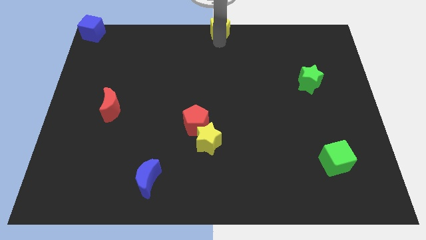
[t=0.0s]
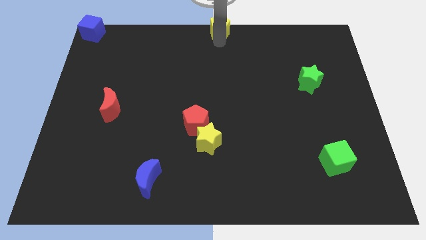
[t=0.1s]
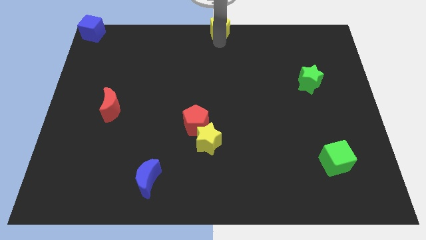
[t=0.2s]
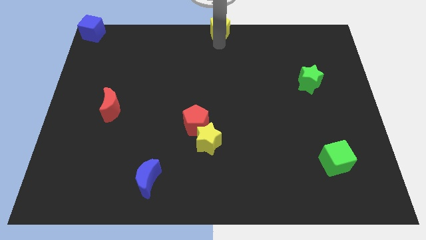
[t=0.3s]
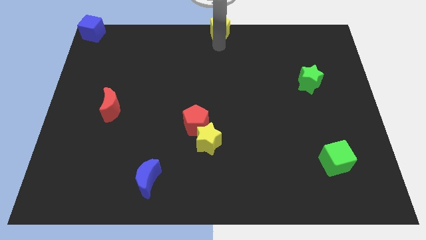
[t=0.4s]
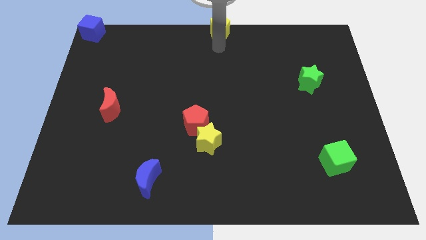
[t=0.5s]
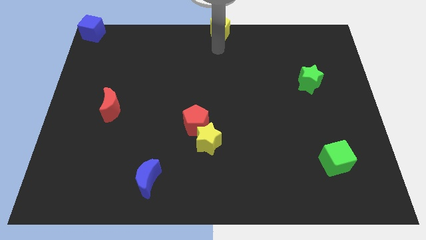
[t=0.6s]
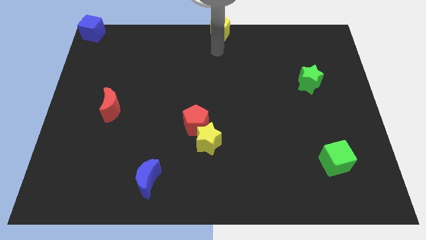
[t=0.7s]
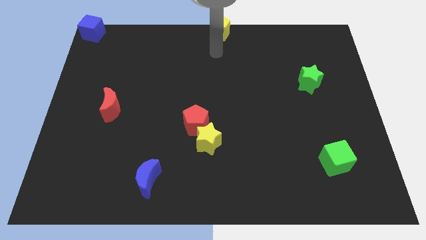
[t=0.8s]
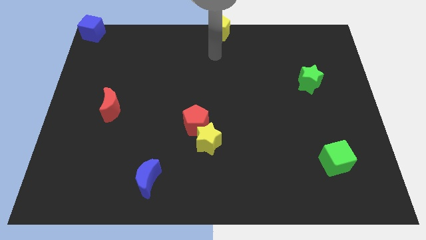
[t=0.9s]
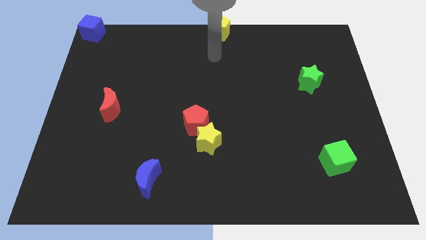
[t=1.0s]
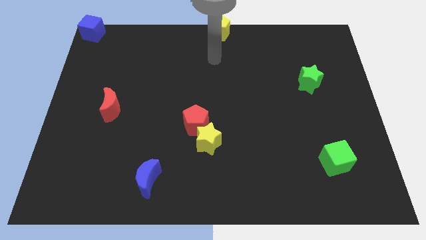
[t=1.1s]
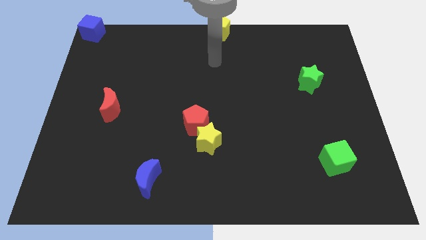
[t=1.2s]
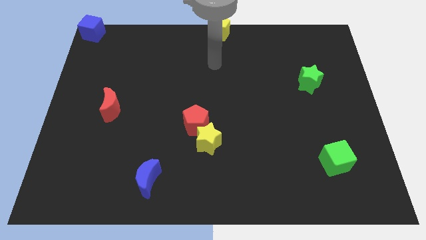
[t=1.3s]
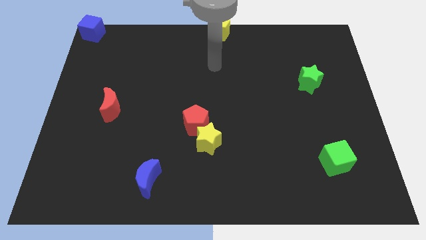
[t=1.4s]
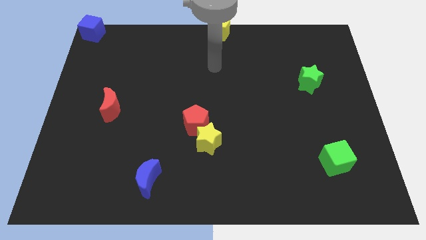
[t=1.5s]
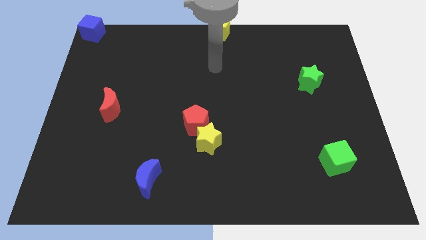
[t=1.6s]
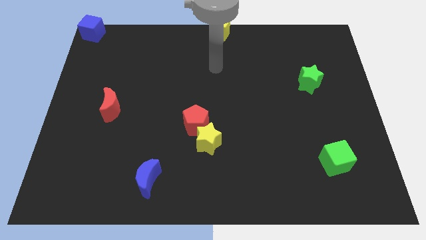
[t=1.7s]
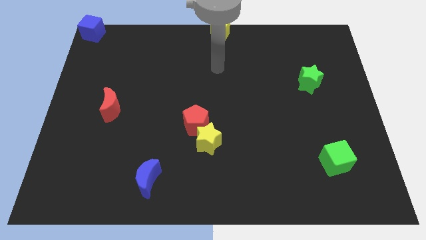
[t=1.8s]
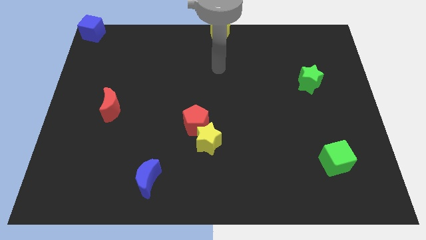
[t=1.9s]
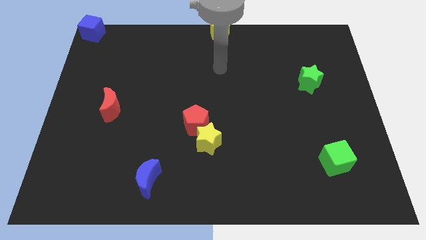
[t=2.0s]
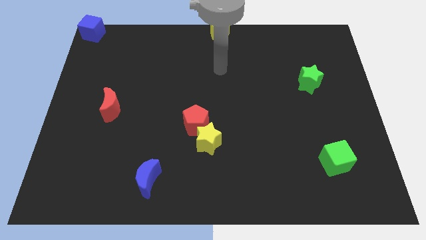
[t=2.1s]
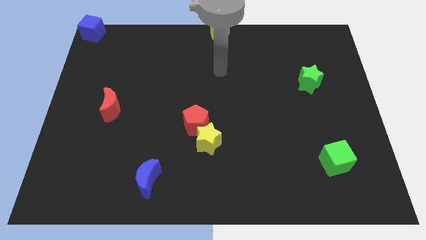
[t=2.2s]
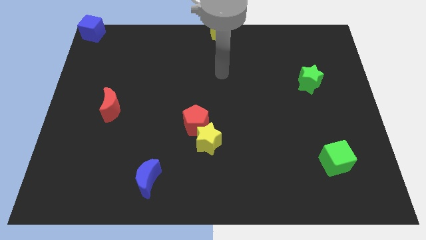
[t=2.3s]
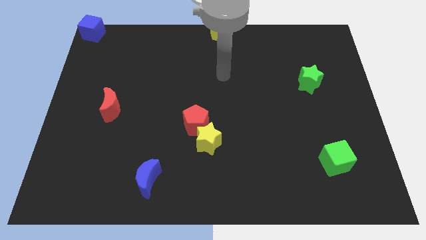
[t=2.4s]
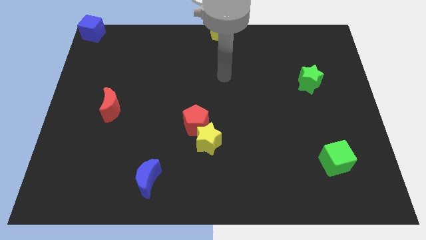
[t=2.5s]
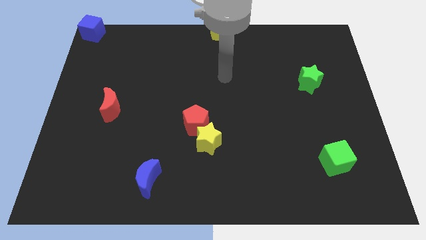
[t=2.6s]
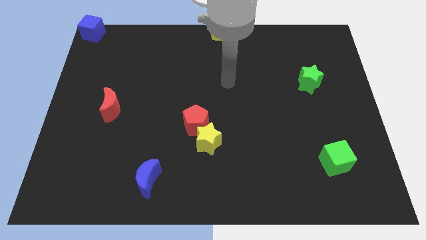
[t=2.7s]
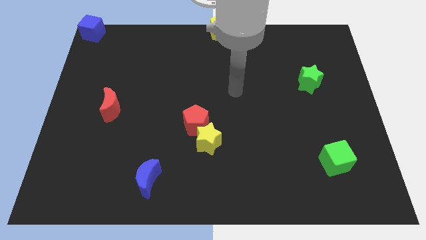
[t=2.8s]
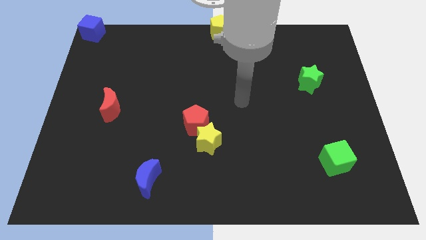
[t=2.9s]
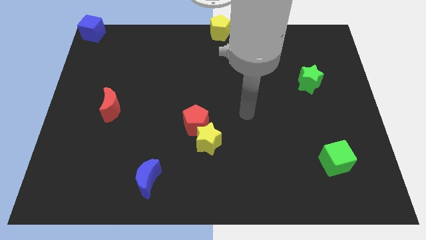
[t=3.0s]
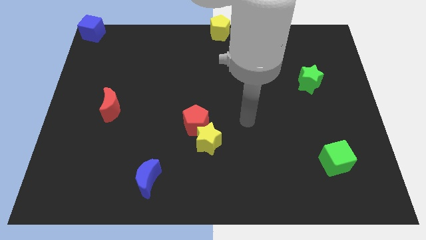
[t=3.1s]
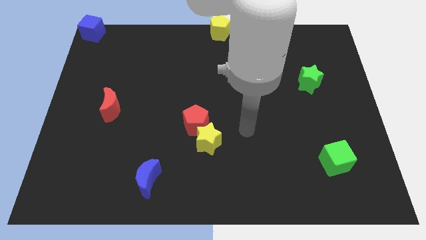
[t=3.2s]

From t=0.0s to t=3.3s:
point arm right beside the red pentagon

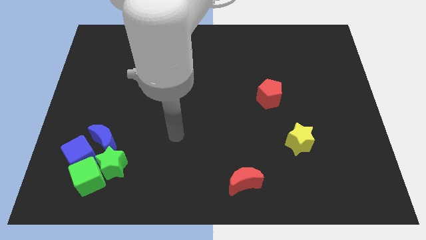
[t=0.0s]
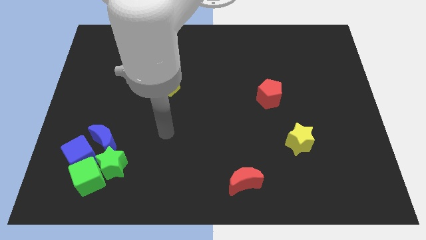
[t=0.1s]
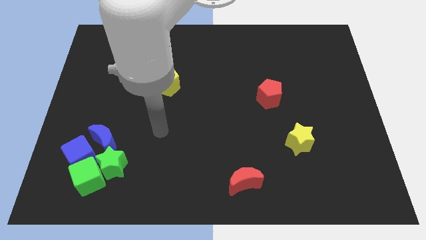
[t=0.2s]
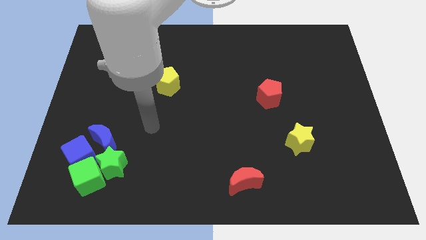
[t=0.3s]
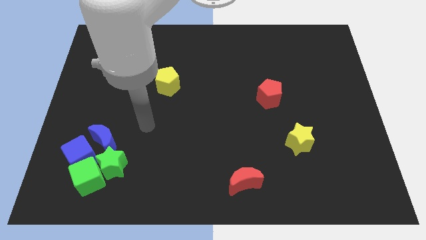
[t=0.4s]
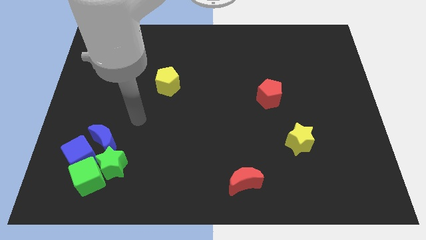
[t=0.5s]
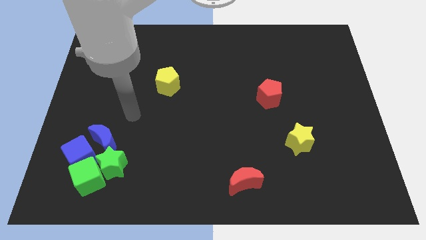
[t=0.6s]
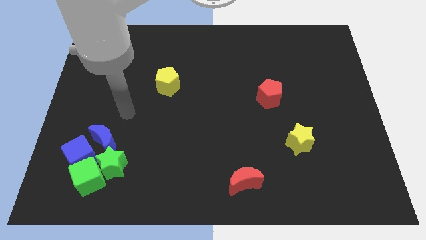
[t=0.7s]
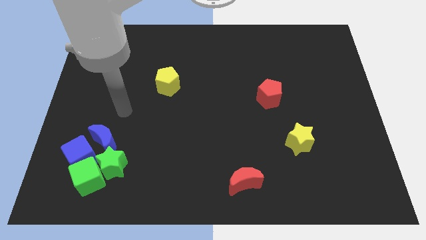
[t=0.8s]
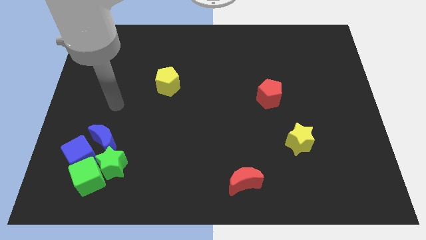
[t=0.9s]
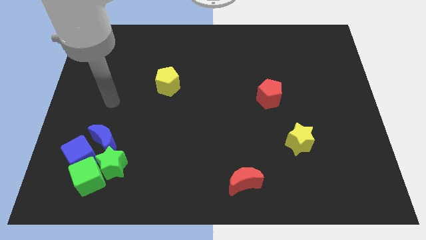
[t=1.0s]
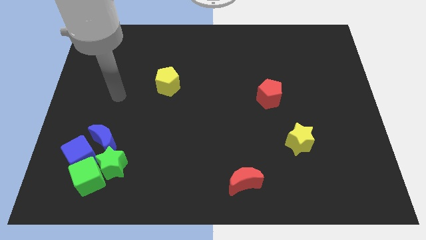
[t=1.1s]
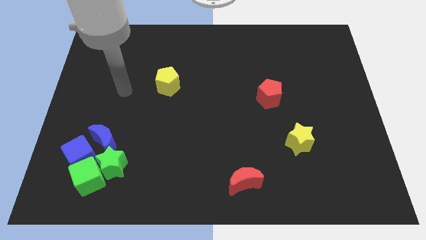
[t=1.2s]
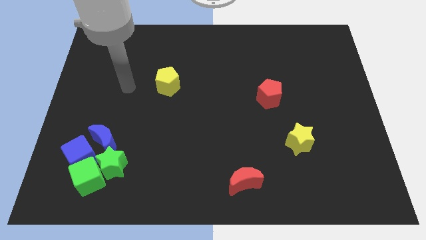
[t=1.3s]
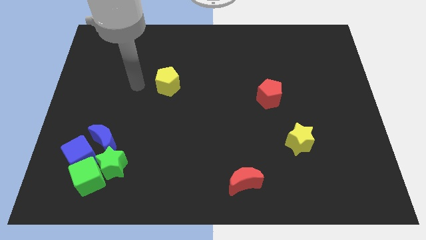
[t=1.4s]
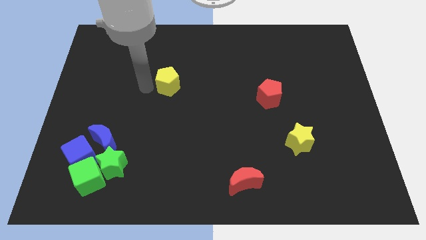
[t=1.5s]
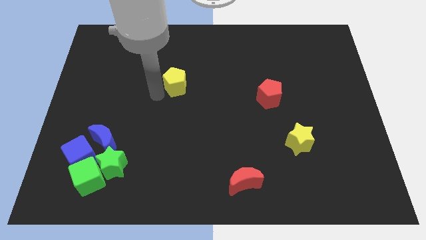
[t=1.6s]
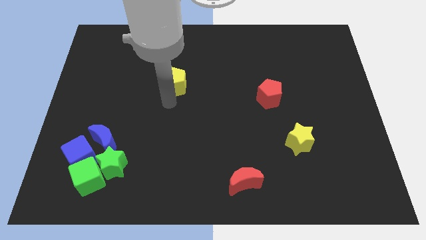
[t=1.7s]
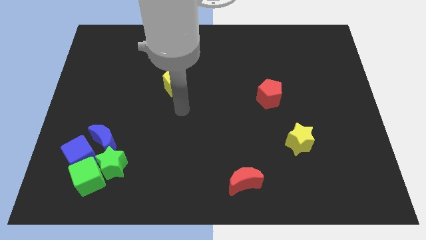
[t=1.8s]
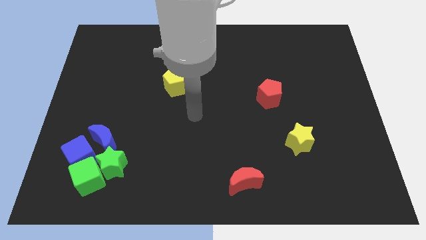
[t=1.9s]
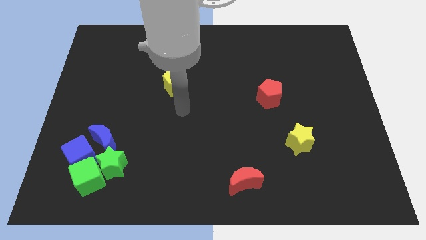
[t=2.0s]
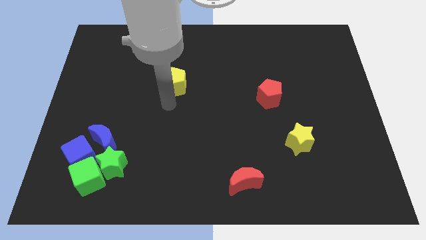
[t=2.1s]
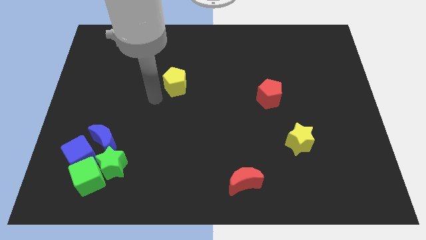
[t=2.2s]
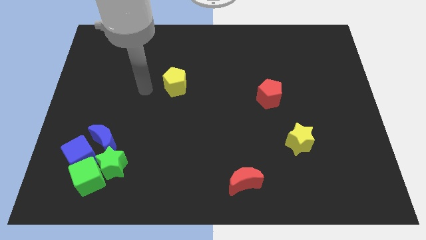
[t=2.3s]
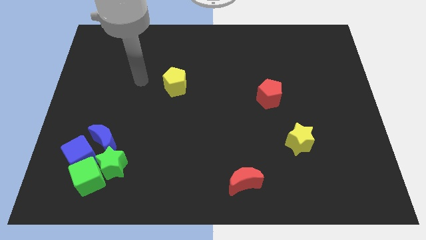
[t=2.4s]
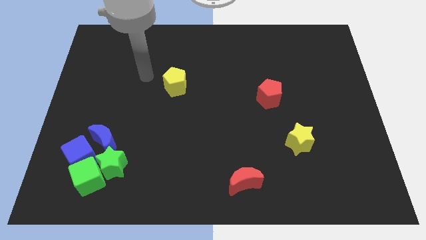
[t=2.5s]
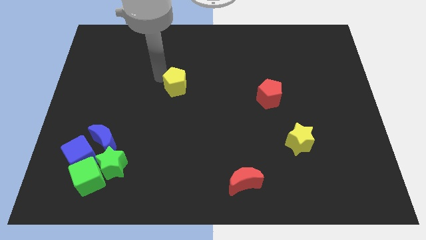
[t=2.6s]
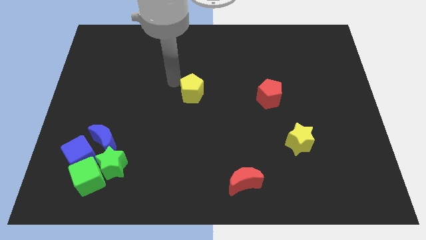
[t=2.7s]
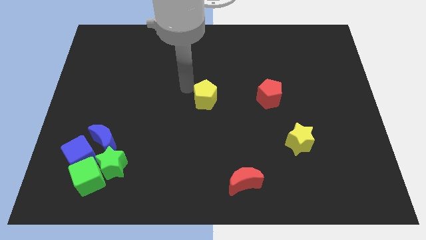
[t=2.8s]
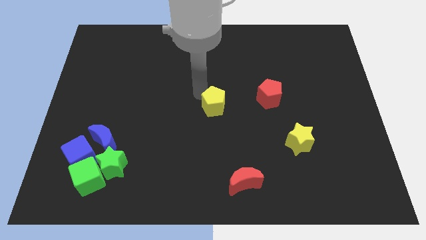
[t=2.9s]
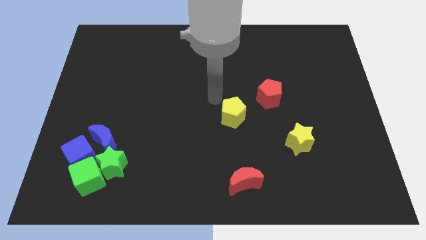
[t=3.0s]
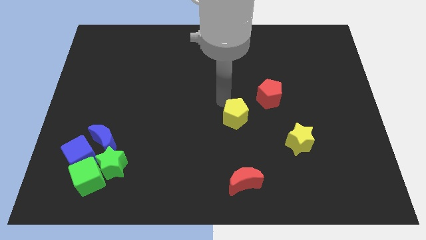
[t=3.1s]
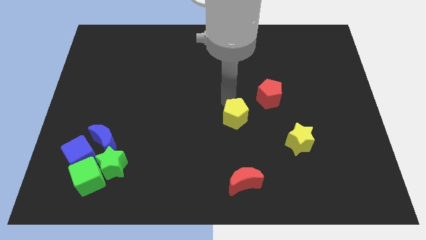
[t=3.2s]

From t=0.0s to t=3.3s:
move the yellow pentagon near the red pentagon

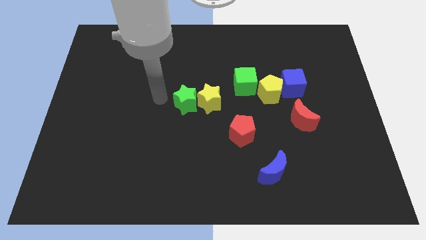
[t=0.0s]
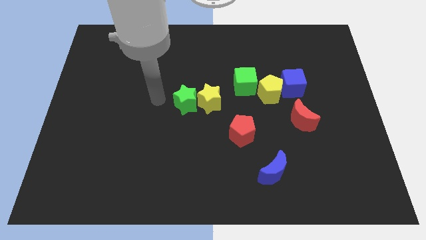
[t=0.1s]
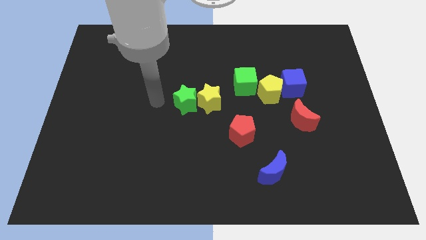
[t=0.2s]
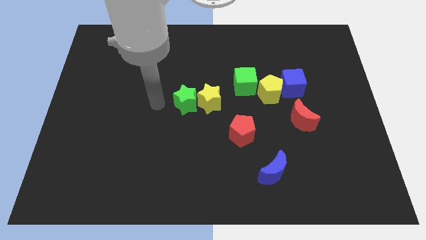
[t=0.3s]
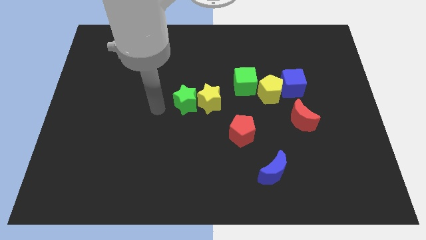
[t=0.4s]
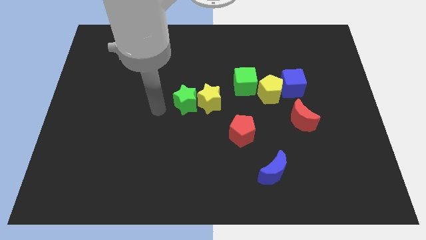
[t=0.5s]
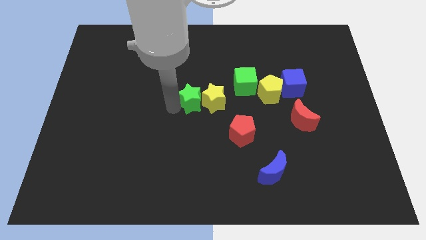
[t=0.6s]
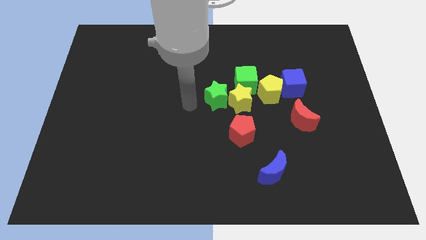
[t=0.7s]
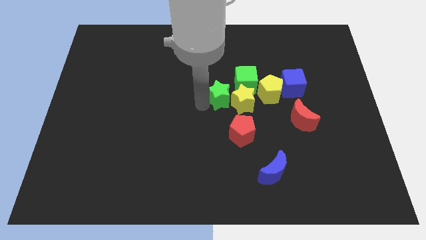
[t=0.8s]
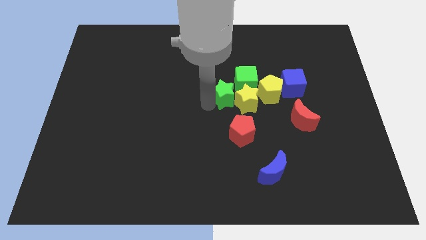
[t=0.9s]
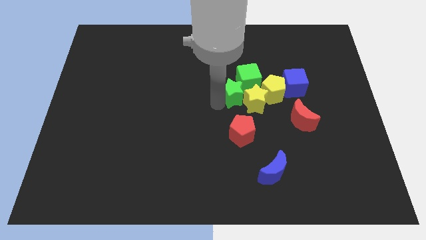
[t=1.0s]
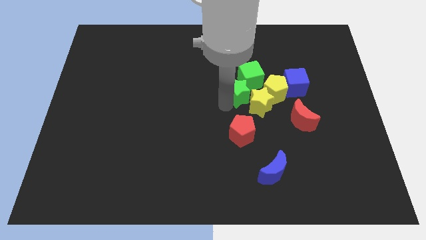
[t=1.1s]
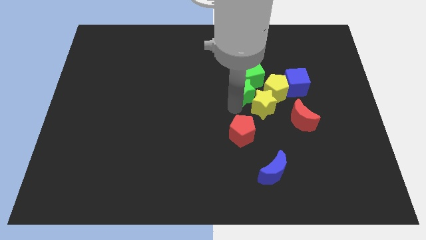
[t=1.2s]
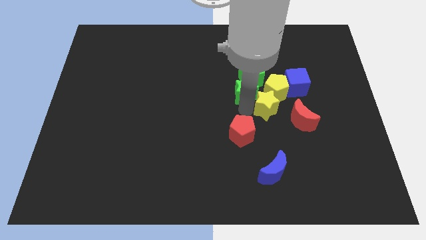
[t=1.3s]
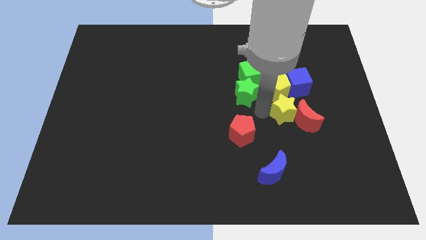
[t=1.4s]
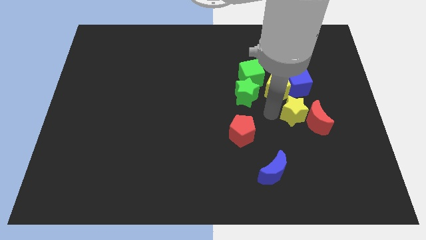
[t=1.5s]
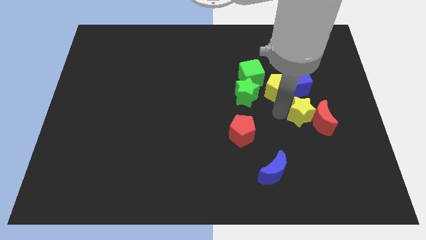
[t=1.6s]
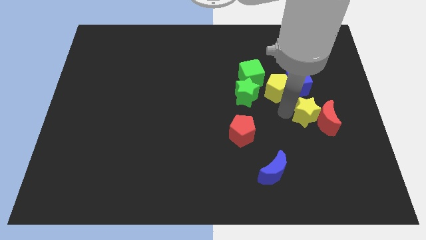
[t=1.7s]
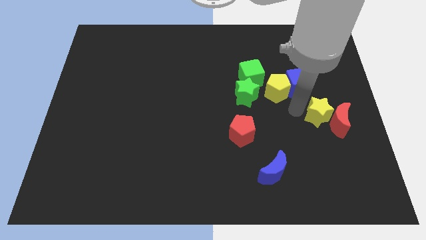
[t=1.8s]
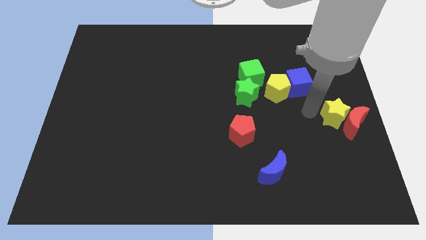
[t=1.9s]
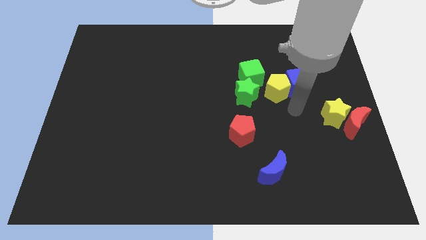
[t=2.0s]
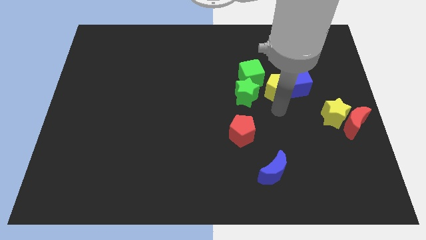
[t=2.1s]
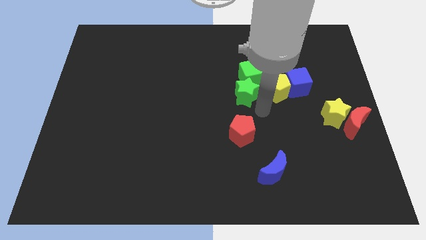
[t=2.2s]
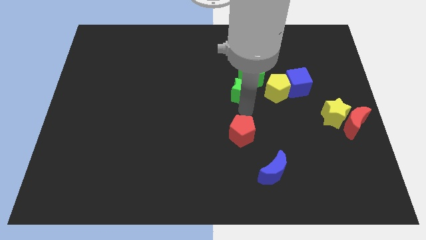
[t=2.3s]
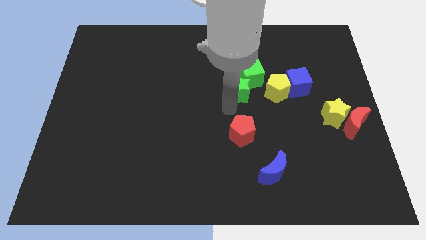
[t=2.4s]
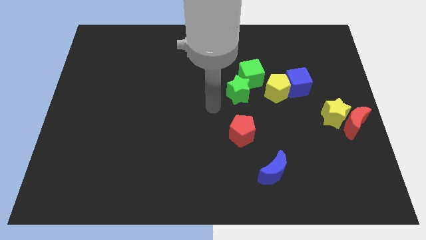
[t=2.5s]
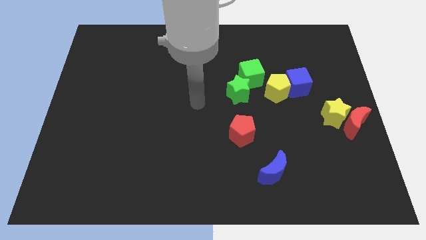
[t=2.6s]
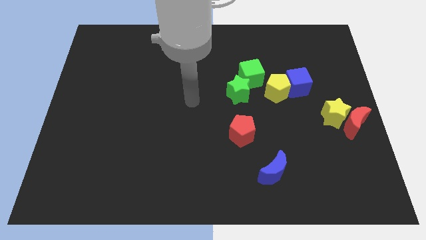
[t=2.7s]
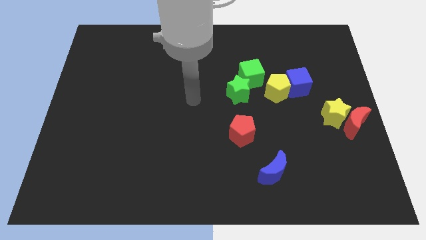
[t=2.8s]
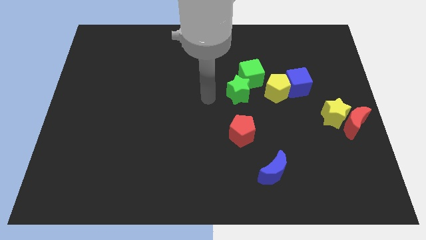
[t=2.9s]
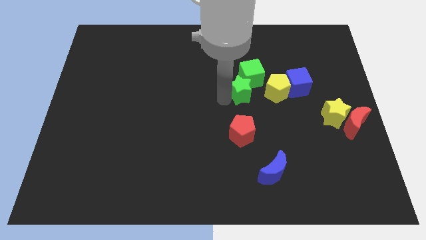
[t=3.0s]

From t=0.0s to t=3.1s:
move the yellow star and red moon to center right
